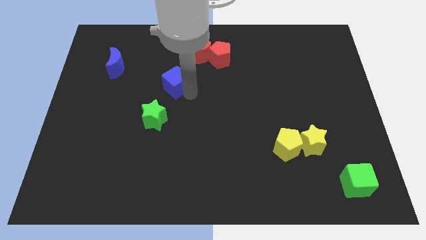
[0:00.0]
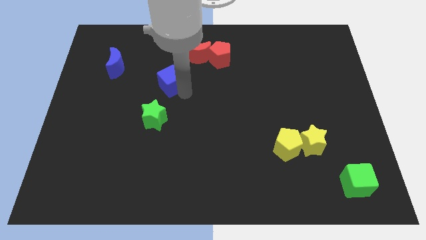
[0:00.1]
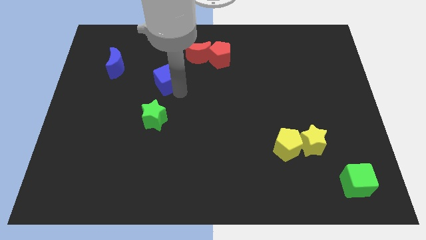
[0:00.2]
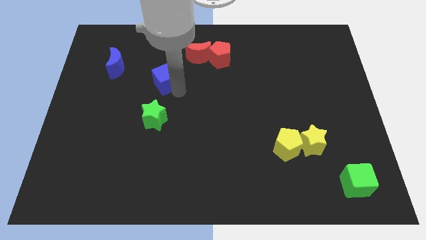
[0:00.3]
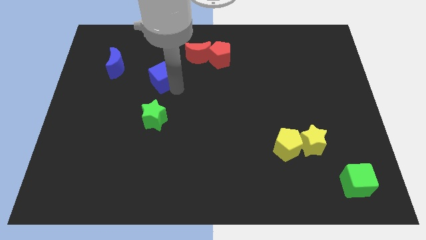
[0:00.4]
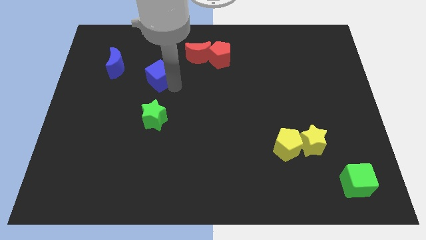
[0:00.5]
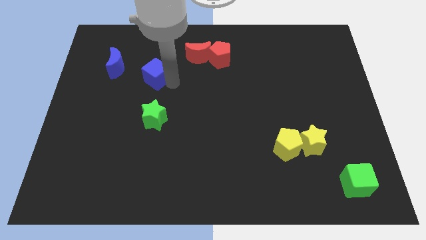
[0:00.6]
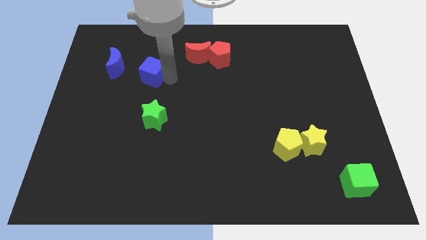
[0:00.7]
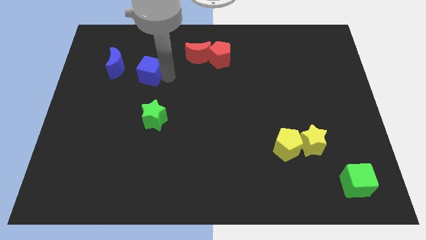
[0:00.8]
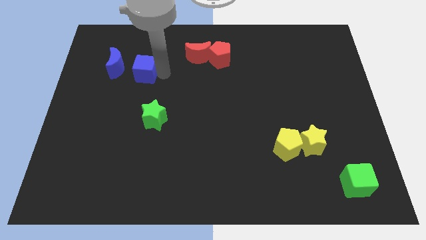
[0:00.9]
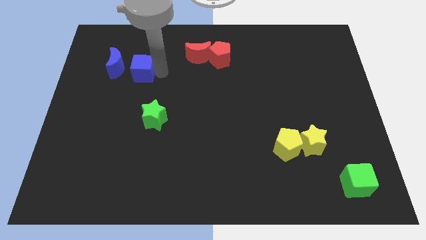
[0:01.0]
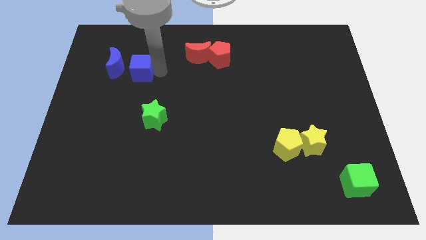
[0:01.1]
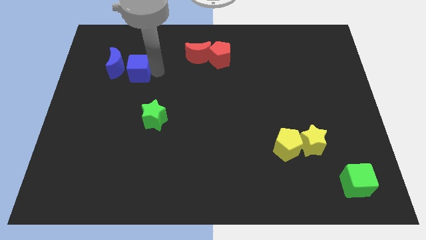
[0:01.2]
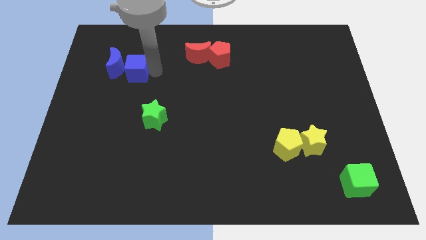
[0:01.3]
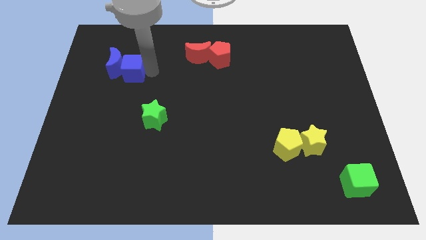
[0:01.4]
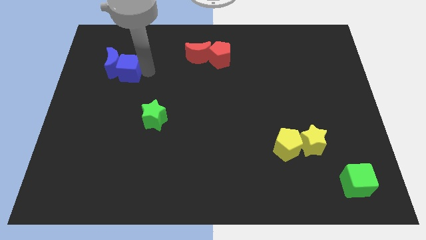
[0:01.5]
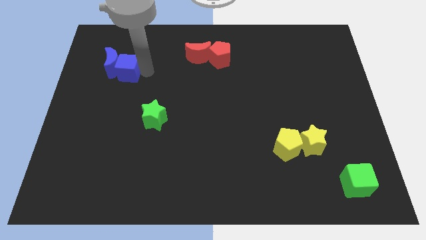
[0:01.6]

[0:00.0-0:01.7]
move your blue cube into the blue crescent

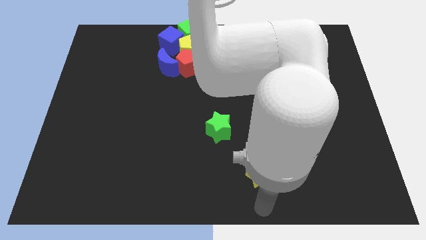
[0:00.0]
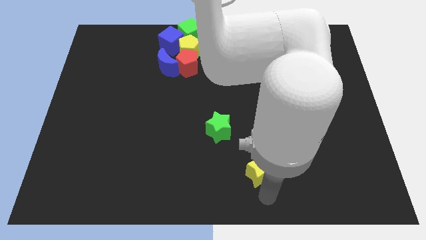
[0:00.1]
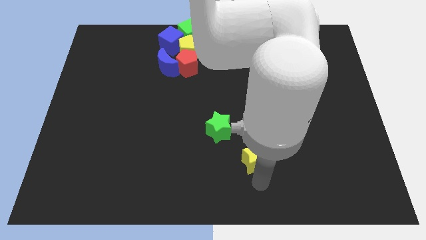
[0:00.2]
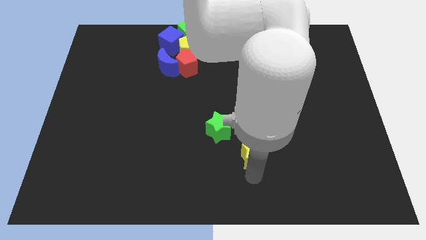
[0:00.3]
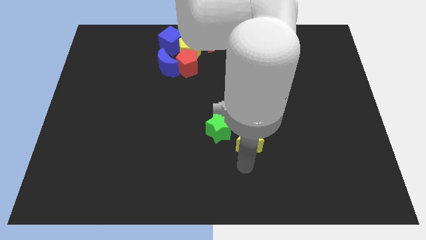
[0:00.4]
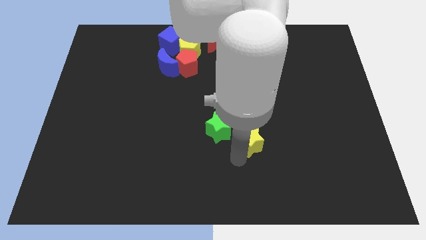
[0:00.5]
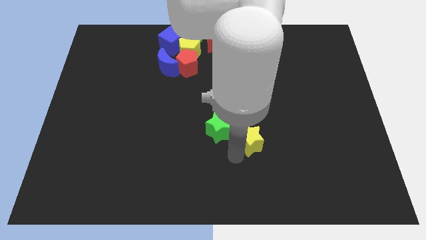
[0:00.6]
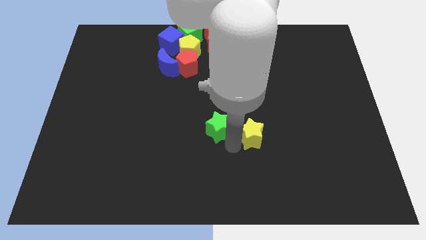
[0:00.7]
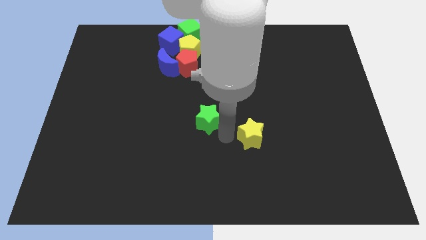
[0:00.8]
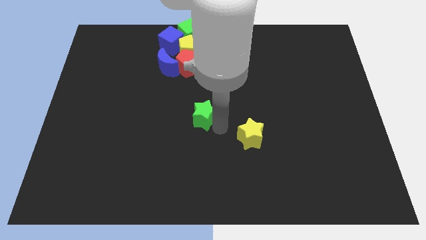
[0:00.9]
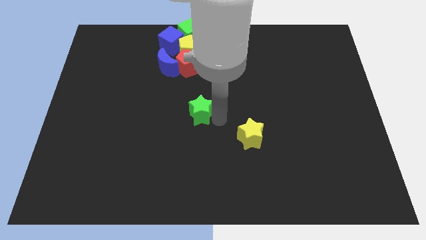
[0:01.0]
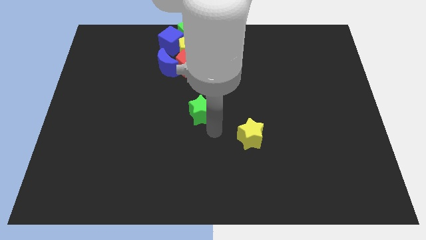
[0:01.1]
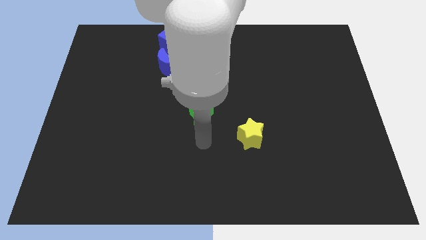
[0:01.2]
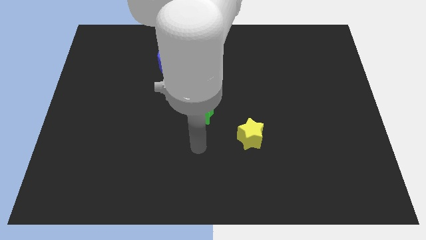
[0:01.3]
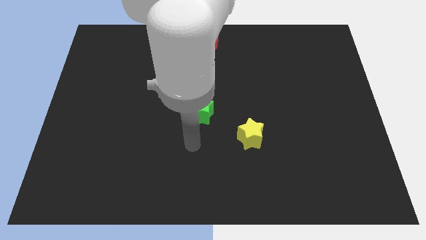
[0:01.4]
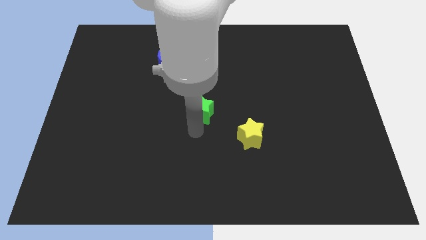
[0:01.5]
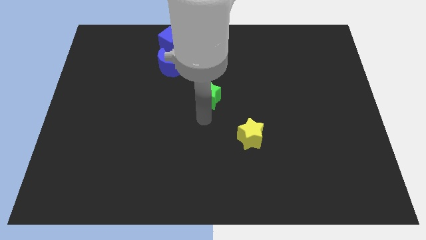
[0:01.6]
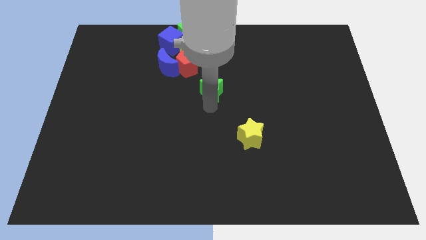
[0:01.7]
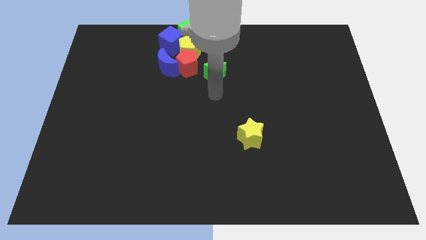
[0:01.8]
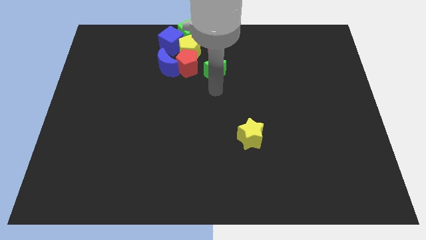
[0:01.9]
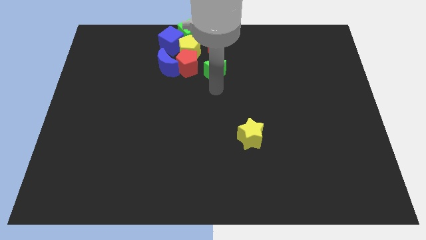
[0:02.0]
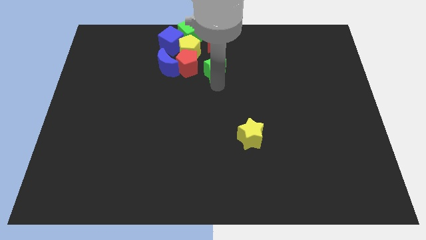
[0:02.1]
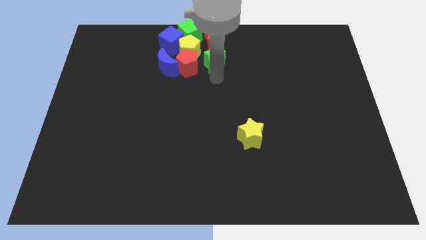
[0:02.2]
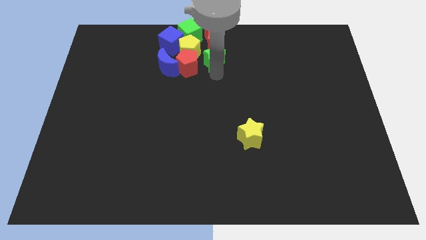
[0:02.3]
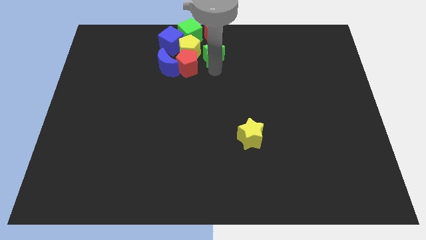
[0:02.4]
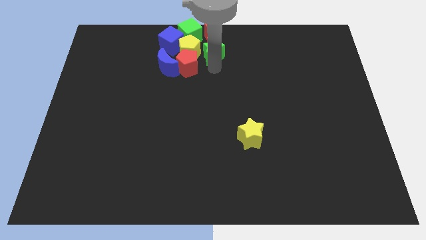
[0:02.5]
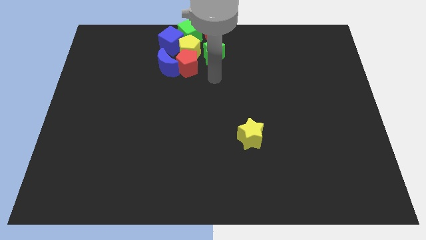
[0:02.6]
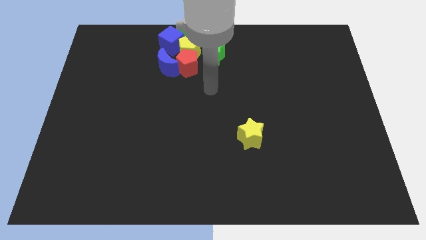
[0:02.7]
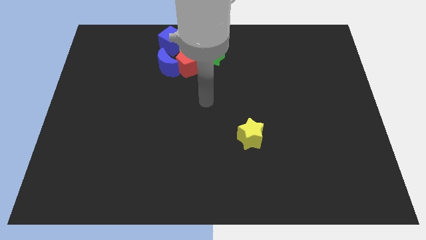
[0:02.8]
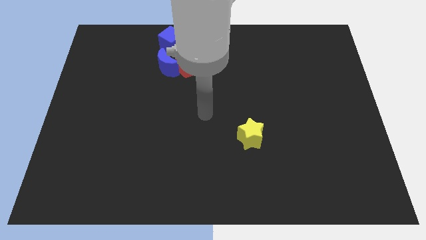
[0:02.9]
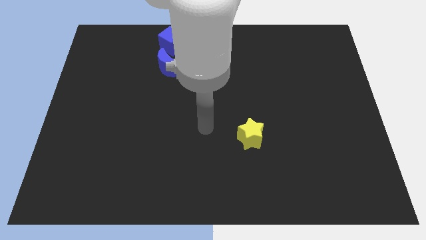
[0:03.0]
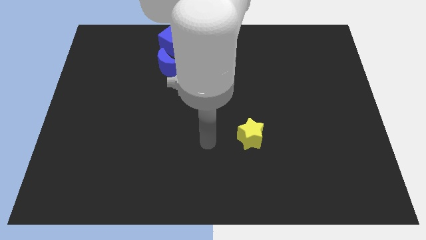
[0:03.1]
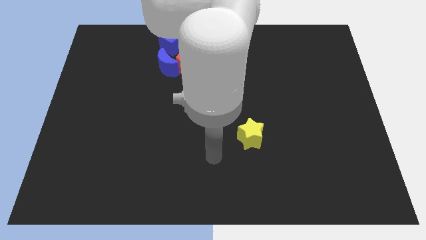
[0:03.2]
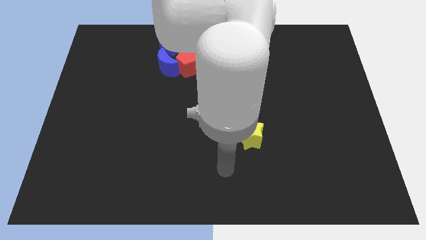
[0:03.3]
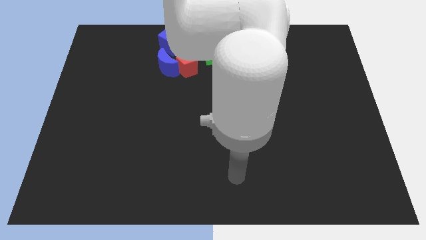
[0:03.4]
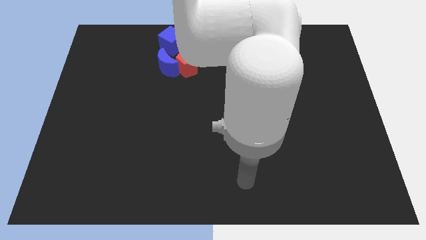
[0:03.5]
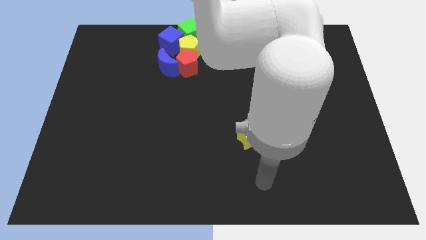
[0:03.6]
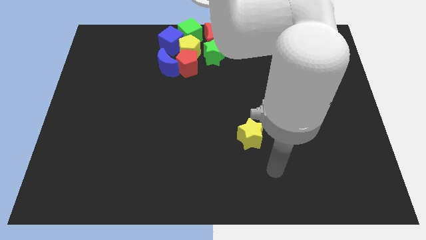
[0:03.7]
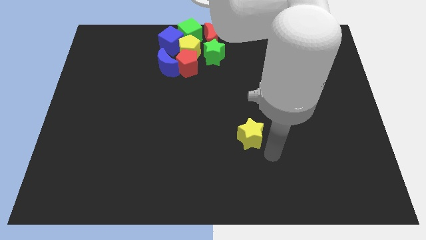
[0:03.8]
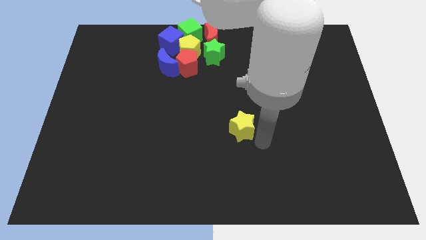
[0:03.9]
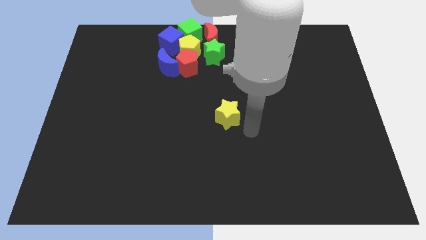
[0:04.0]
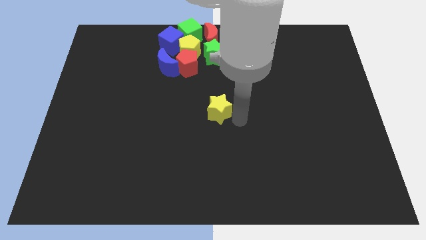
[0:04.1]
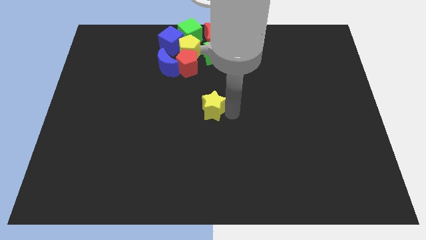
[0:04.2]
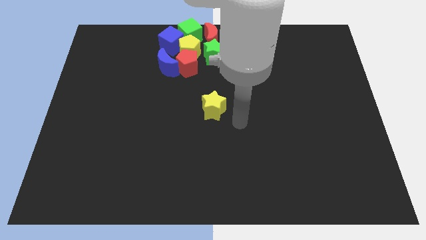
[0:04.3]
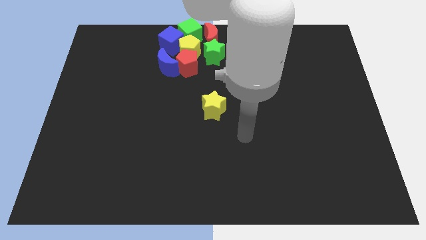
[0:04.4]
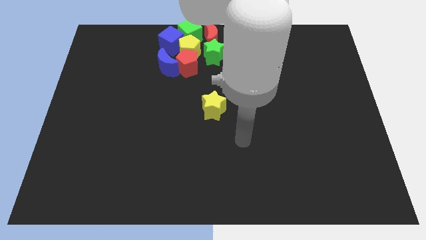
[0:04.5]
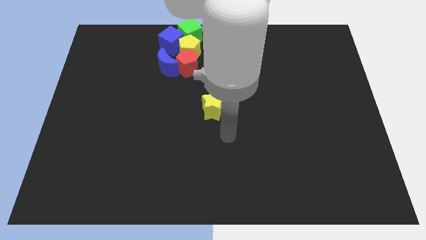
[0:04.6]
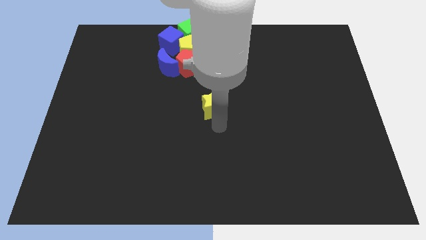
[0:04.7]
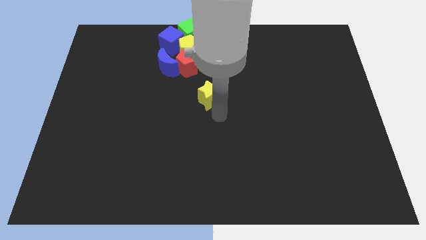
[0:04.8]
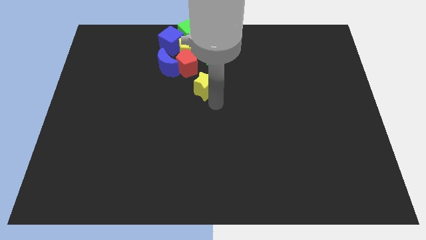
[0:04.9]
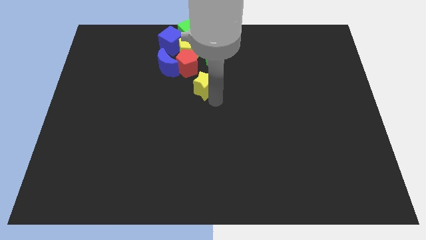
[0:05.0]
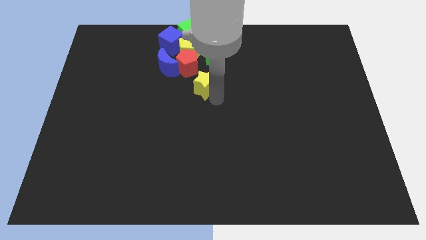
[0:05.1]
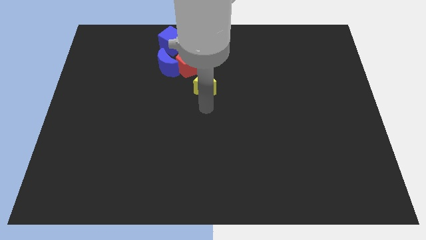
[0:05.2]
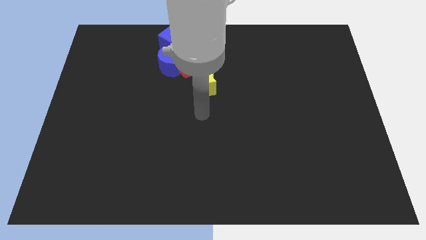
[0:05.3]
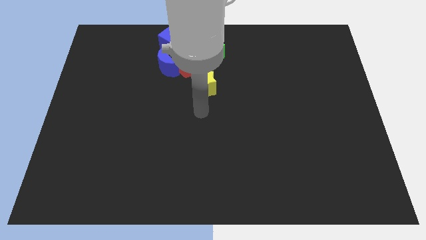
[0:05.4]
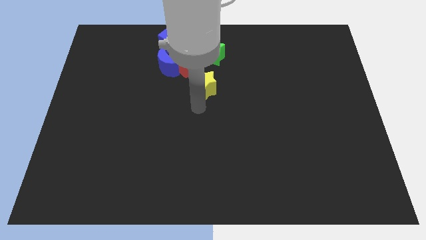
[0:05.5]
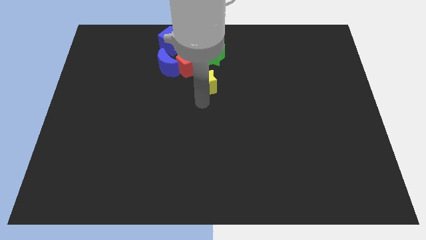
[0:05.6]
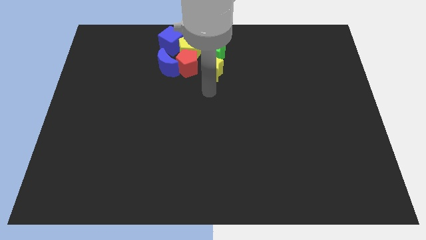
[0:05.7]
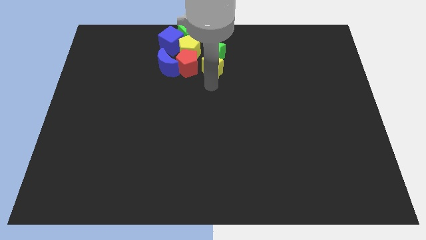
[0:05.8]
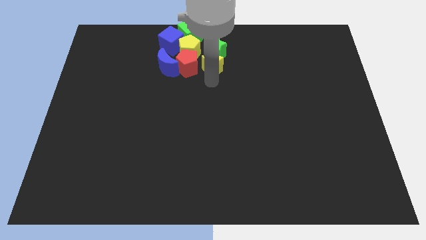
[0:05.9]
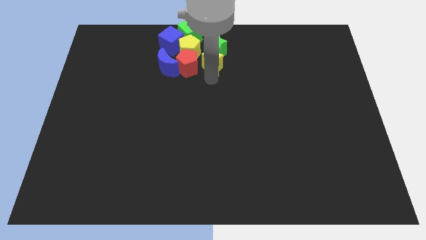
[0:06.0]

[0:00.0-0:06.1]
bring the green star and yellow star to the bottom side of the red crescent

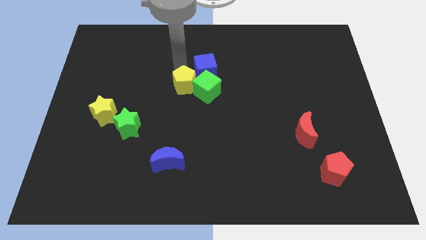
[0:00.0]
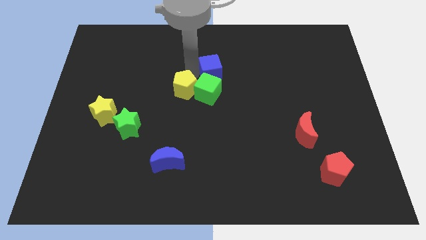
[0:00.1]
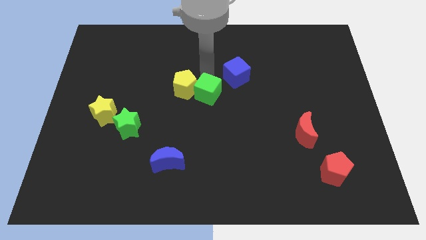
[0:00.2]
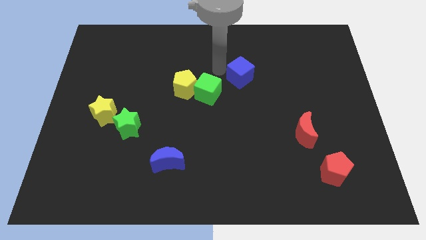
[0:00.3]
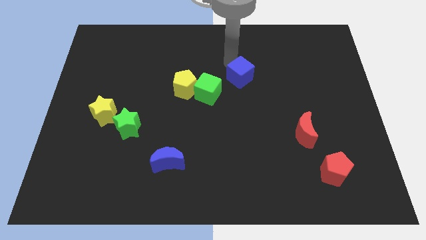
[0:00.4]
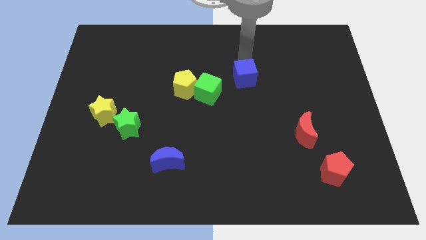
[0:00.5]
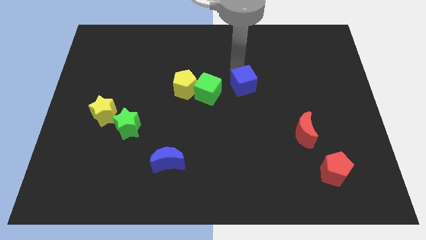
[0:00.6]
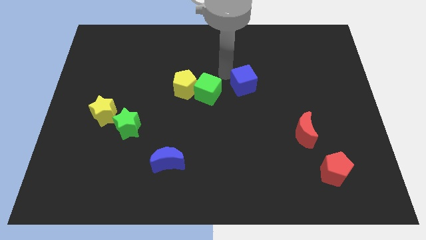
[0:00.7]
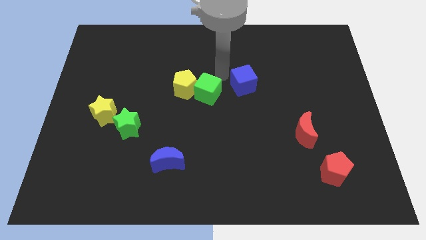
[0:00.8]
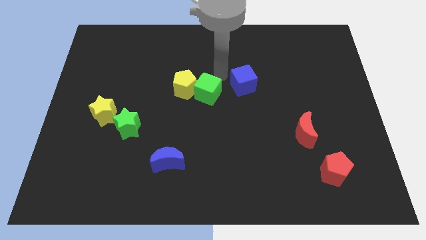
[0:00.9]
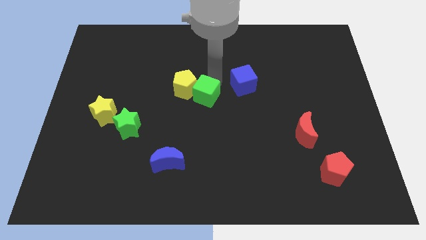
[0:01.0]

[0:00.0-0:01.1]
separate blue cube from the yellow pentagon and green cube

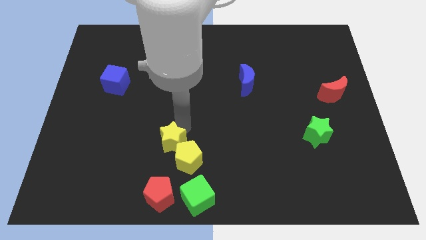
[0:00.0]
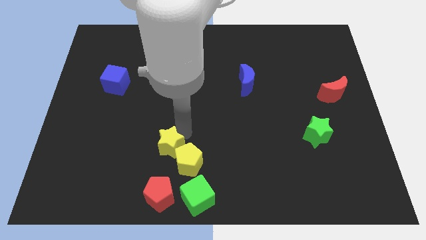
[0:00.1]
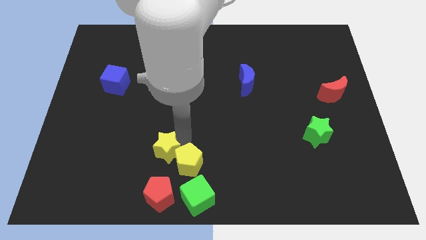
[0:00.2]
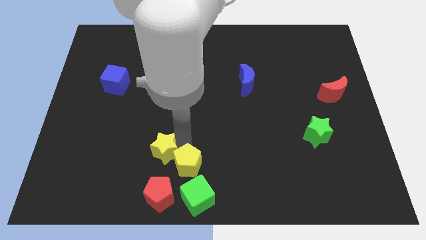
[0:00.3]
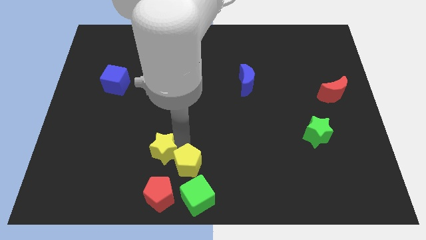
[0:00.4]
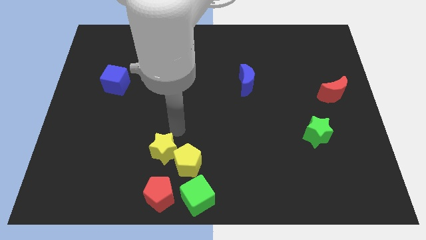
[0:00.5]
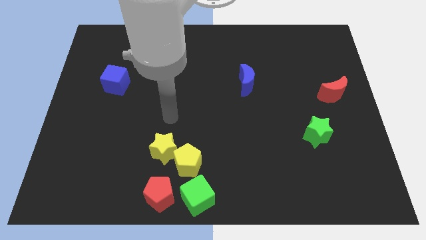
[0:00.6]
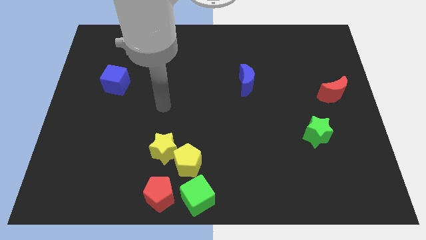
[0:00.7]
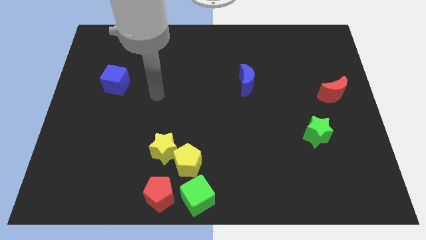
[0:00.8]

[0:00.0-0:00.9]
place yellow pentagon at the top of the green cube
